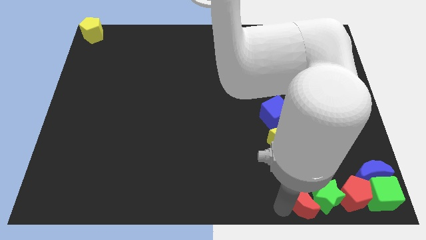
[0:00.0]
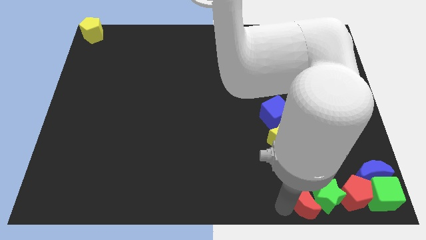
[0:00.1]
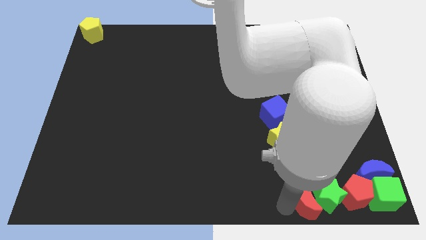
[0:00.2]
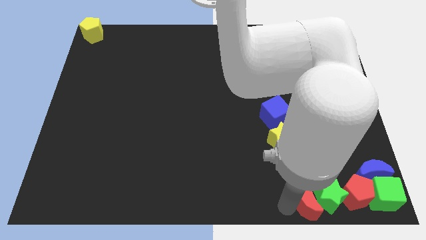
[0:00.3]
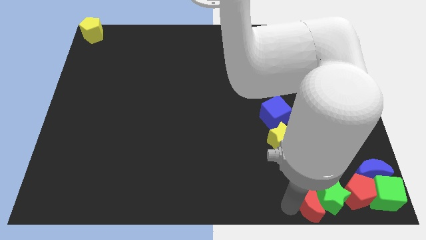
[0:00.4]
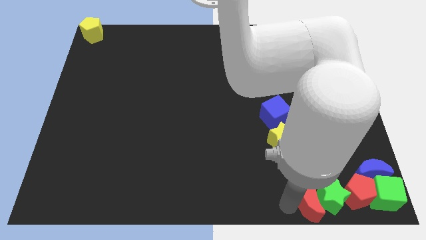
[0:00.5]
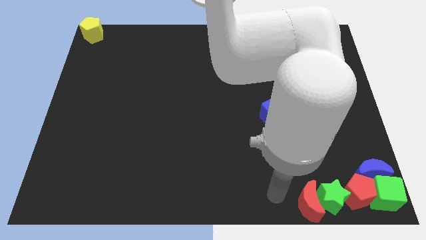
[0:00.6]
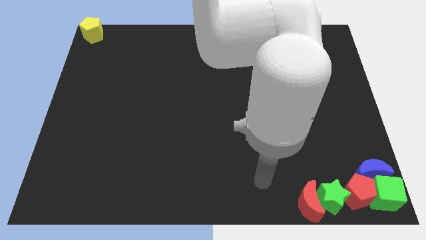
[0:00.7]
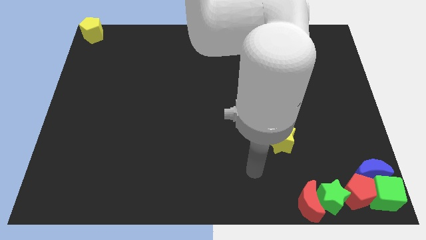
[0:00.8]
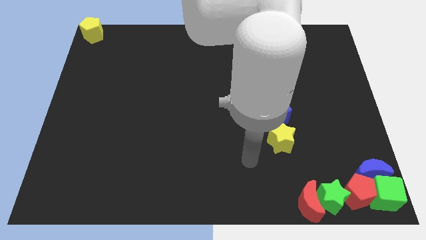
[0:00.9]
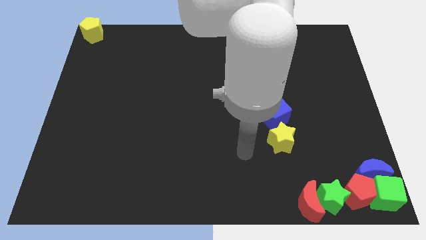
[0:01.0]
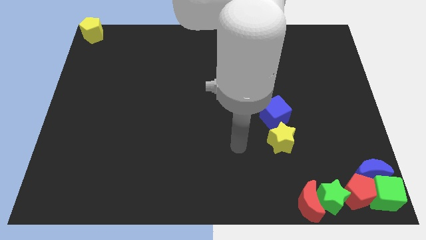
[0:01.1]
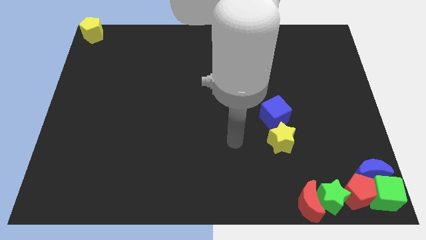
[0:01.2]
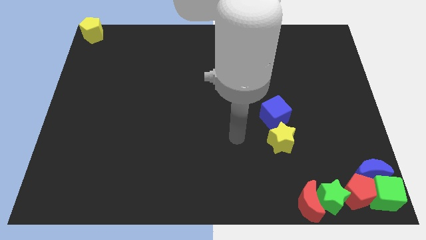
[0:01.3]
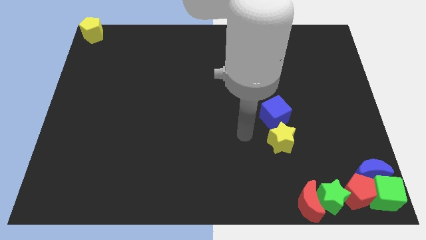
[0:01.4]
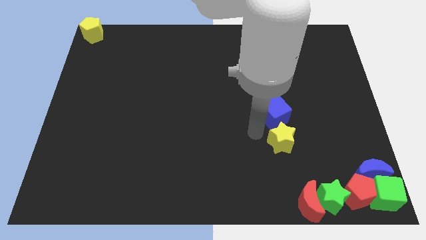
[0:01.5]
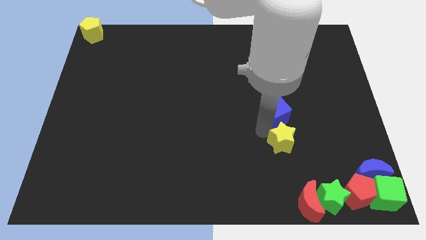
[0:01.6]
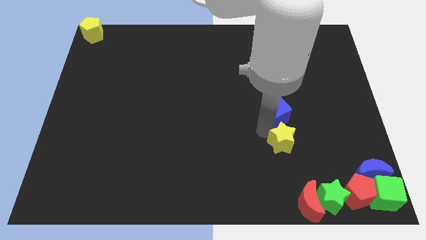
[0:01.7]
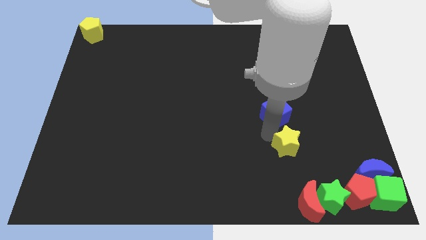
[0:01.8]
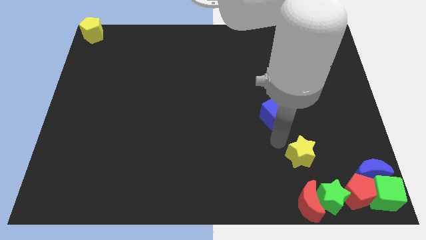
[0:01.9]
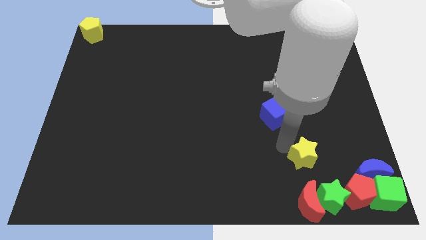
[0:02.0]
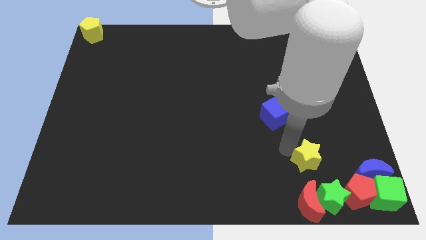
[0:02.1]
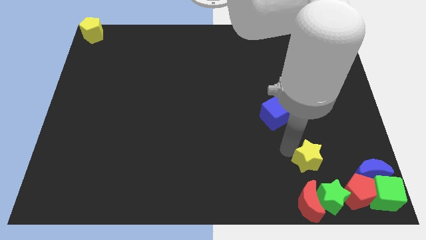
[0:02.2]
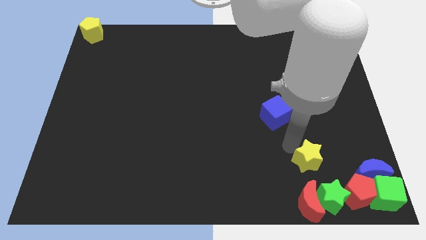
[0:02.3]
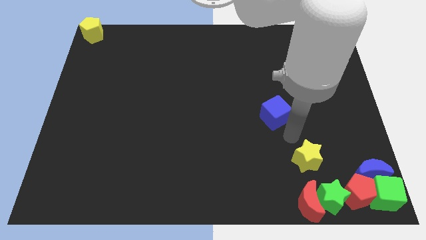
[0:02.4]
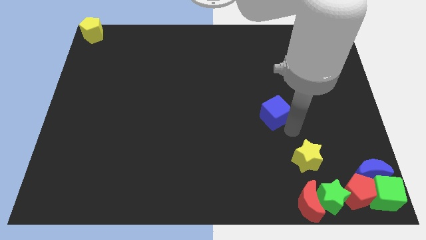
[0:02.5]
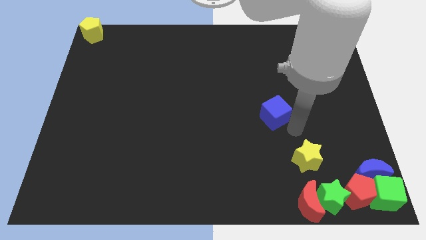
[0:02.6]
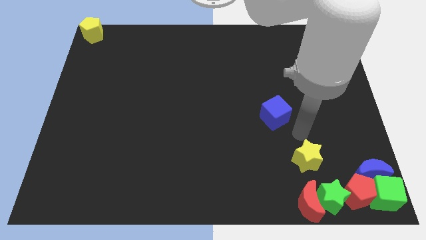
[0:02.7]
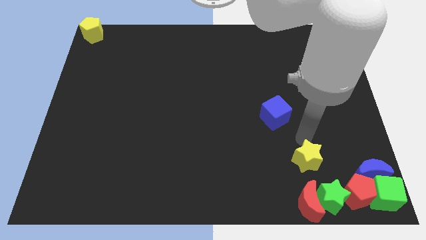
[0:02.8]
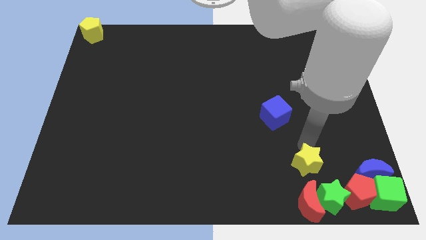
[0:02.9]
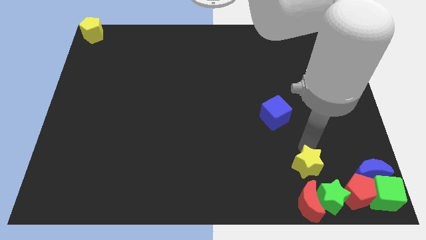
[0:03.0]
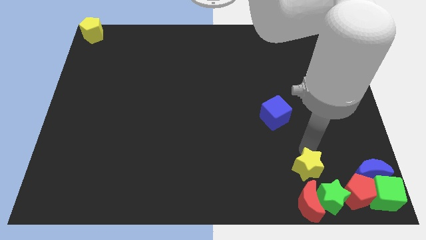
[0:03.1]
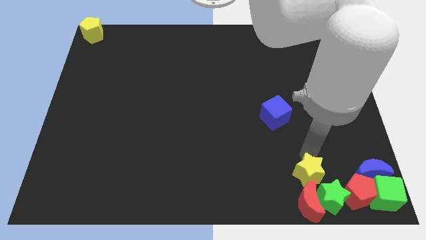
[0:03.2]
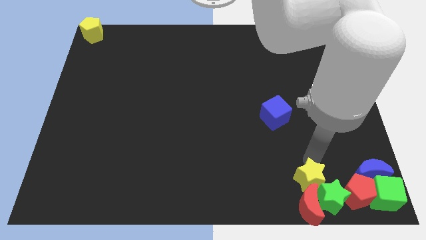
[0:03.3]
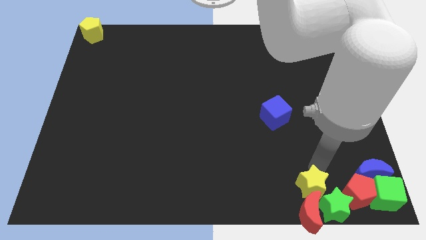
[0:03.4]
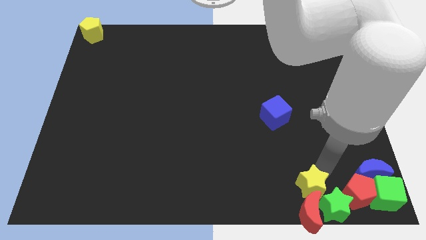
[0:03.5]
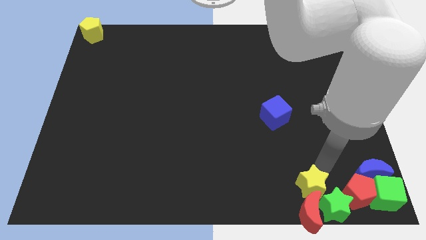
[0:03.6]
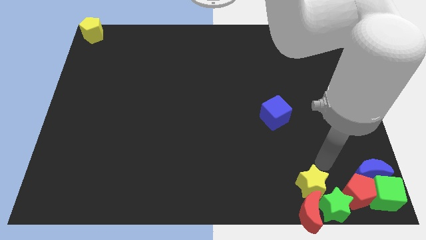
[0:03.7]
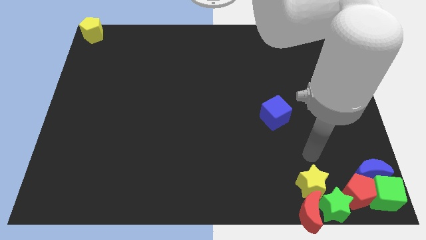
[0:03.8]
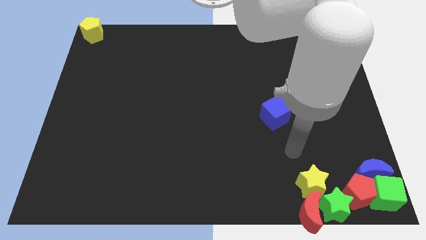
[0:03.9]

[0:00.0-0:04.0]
push red moon and yellow star in to green star

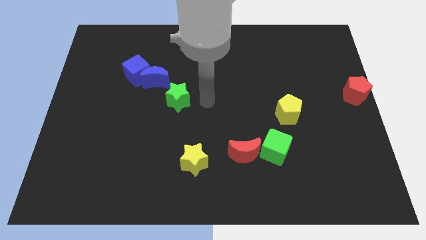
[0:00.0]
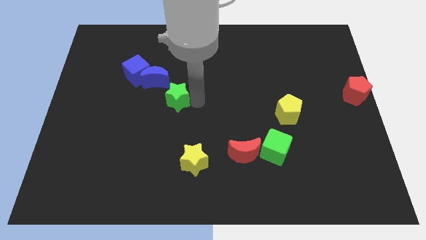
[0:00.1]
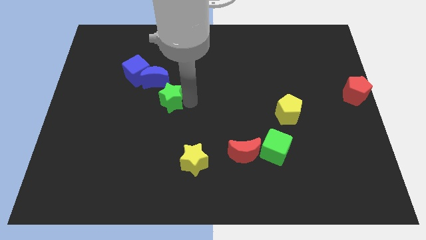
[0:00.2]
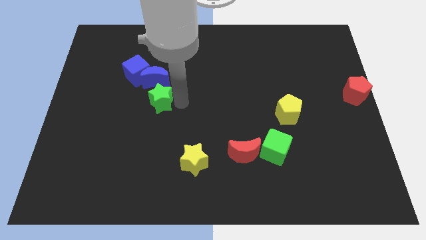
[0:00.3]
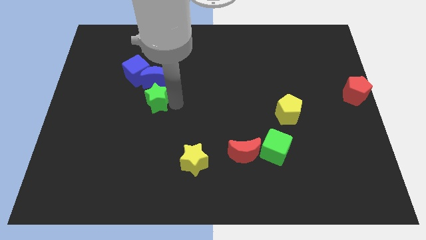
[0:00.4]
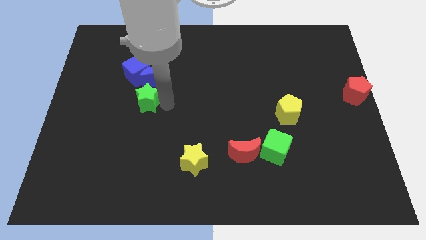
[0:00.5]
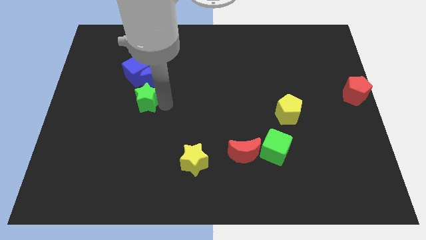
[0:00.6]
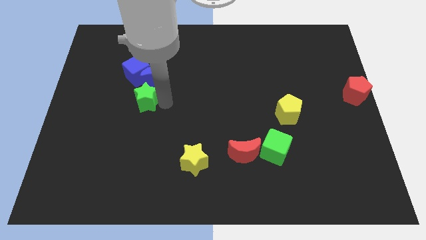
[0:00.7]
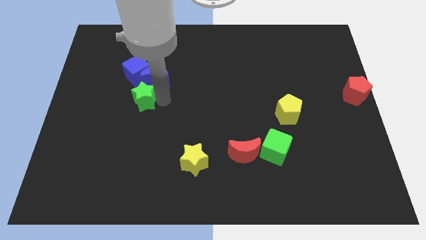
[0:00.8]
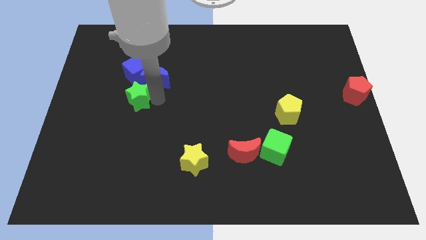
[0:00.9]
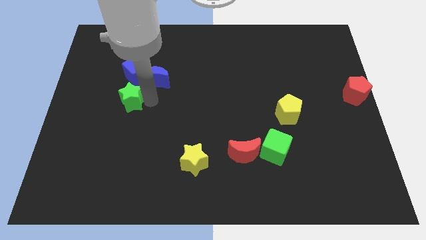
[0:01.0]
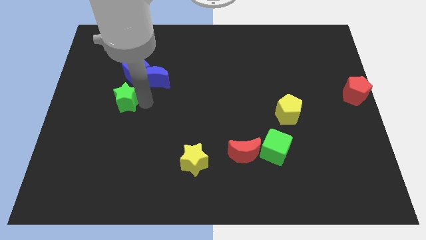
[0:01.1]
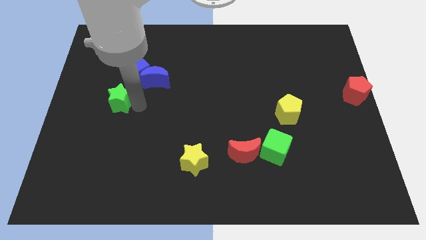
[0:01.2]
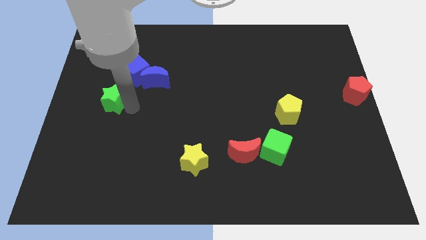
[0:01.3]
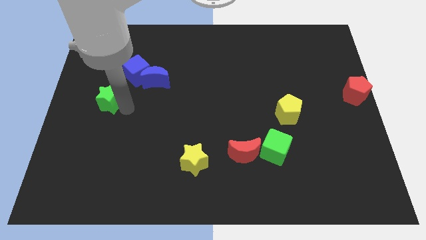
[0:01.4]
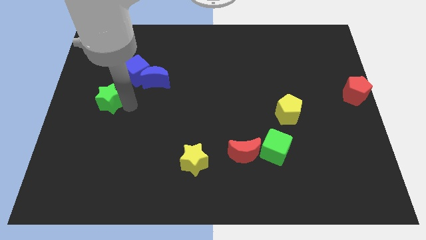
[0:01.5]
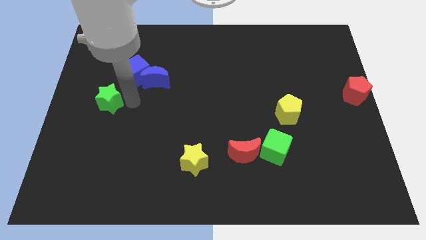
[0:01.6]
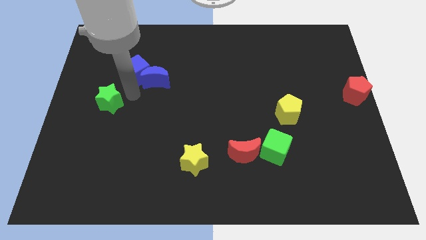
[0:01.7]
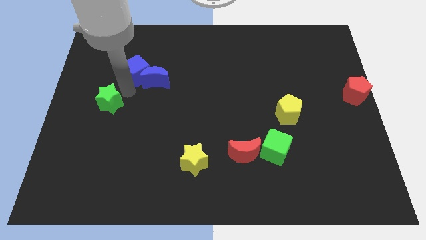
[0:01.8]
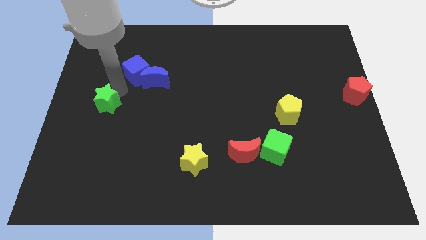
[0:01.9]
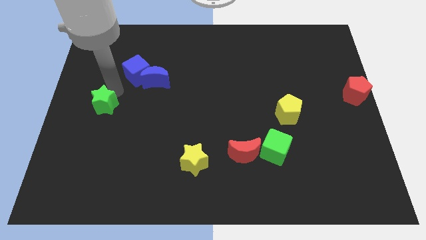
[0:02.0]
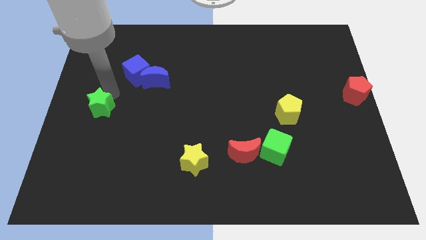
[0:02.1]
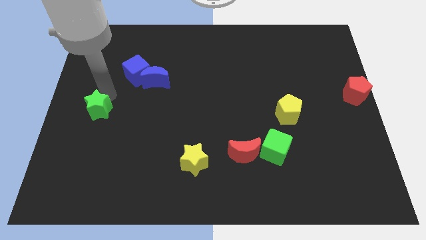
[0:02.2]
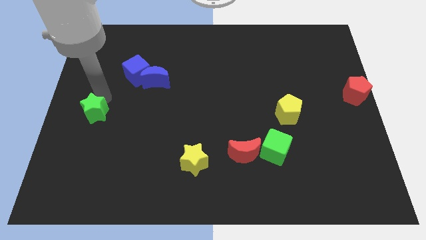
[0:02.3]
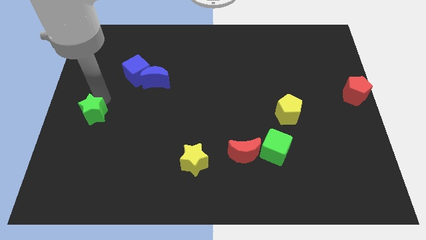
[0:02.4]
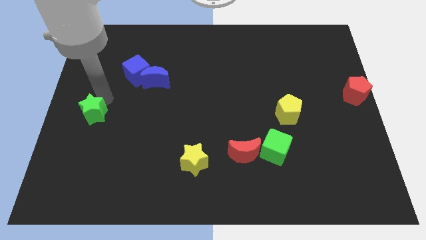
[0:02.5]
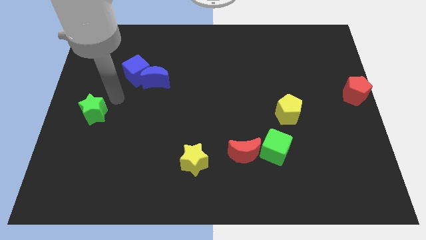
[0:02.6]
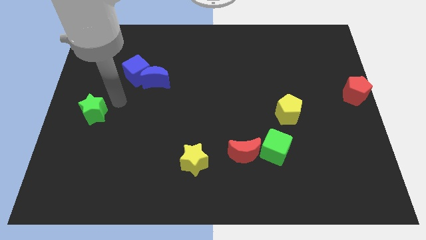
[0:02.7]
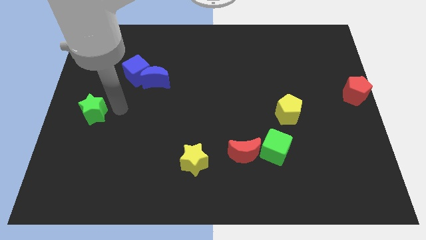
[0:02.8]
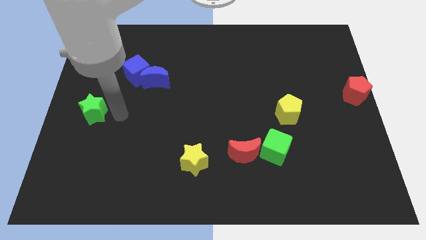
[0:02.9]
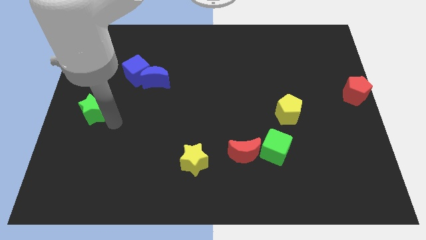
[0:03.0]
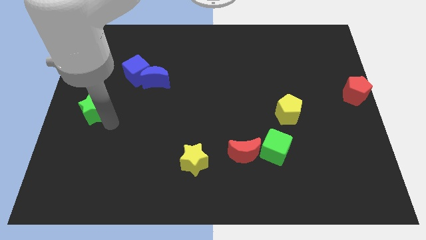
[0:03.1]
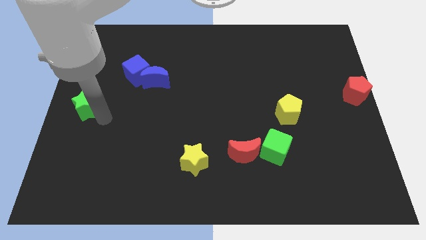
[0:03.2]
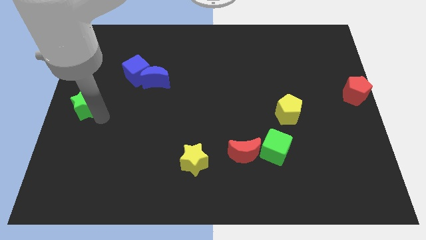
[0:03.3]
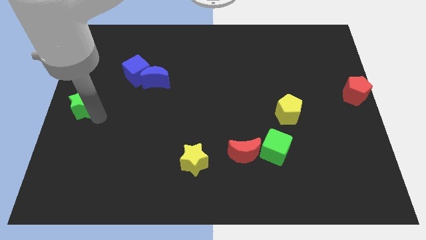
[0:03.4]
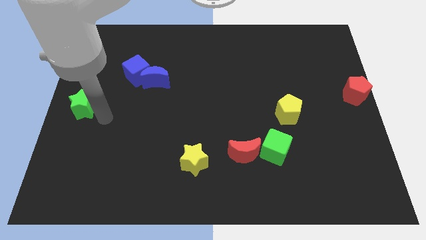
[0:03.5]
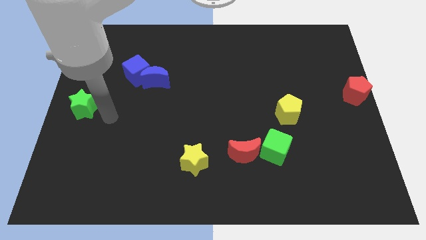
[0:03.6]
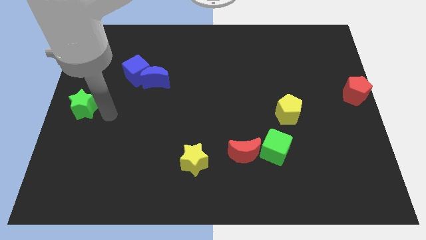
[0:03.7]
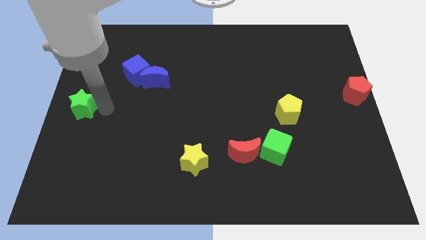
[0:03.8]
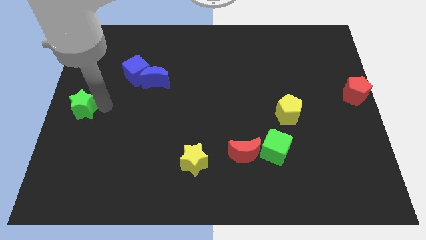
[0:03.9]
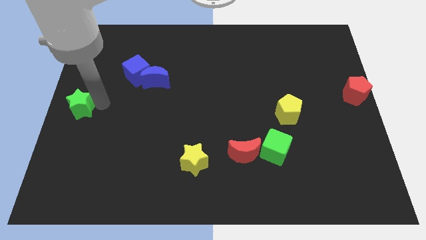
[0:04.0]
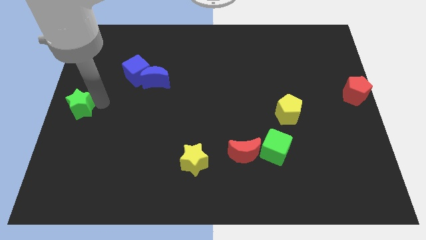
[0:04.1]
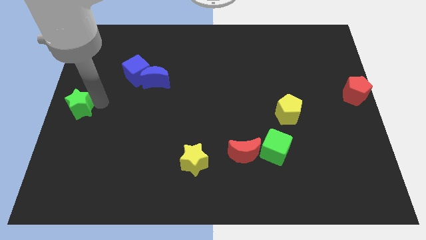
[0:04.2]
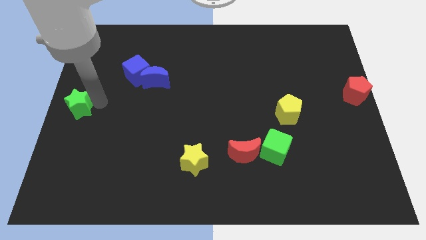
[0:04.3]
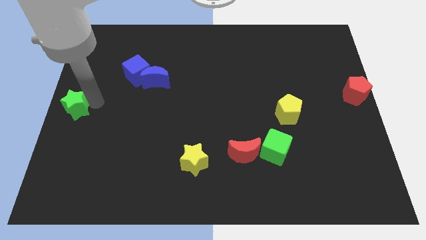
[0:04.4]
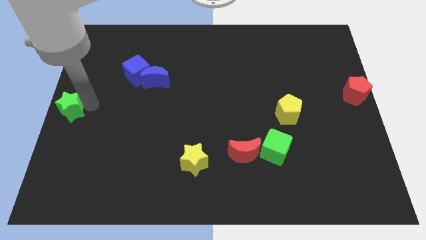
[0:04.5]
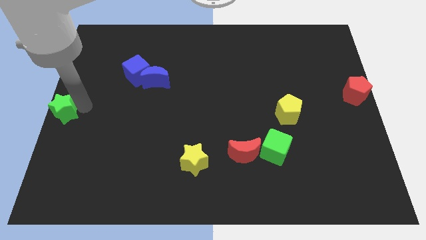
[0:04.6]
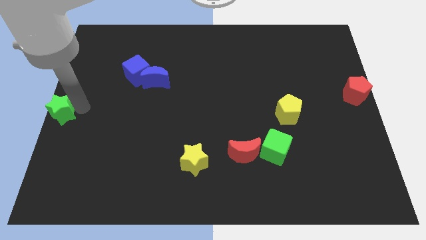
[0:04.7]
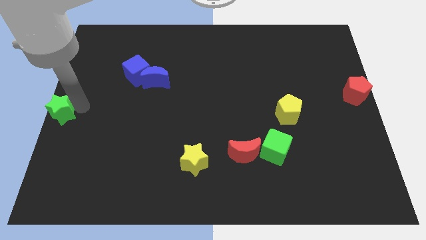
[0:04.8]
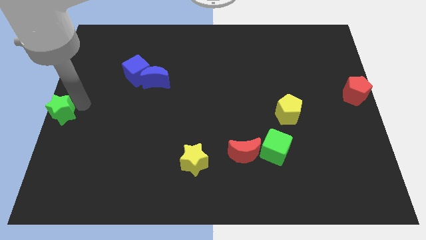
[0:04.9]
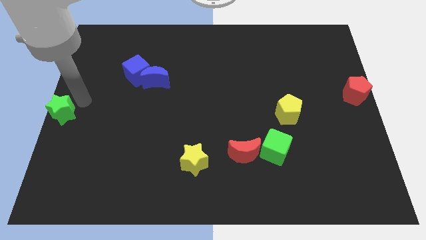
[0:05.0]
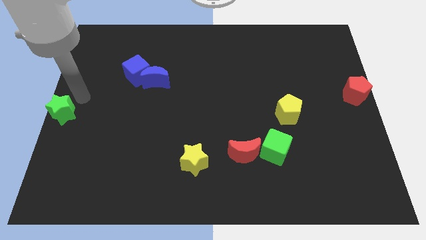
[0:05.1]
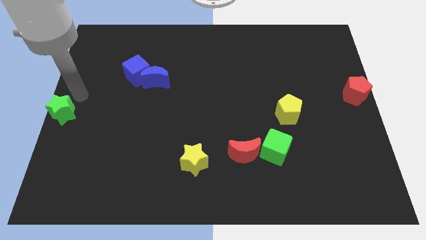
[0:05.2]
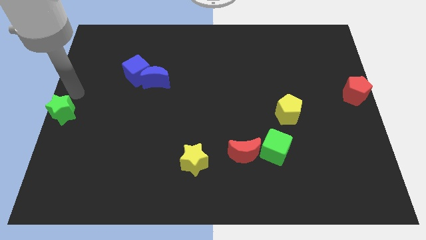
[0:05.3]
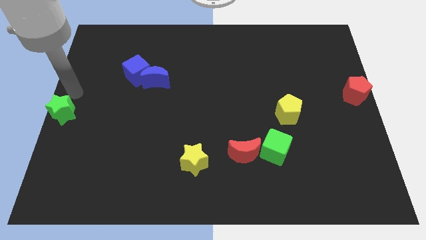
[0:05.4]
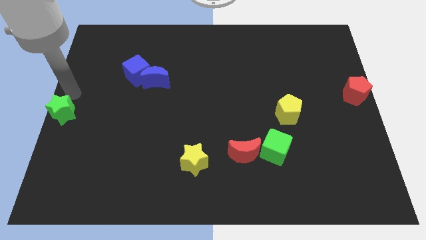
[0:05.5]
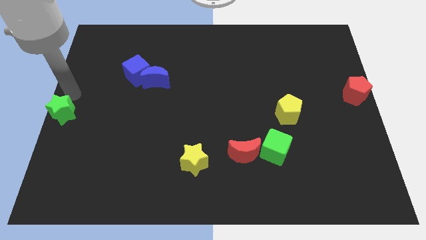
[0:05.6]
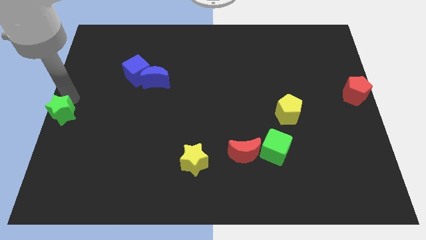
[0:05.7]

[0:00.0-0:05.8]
move the green star to the center left of the board
